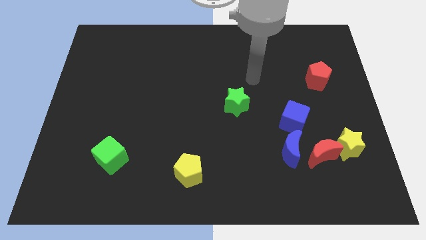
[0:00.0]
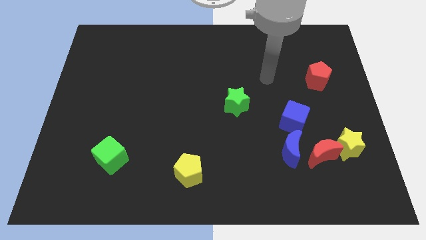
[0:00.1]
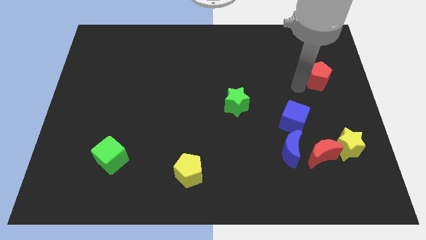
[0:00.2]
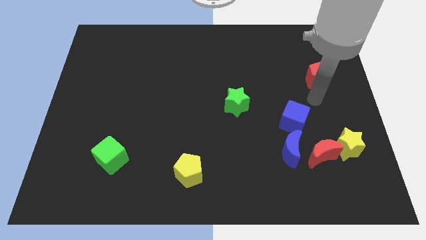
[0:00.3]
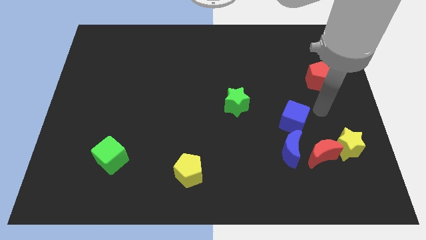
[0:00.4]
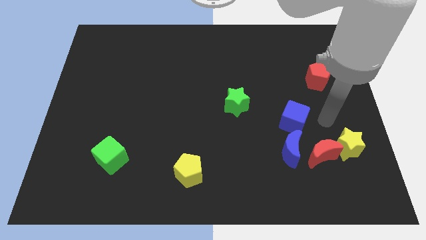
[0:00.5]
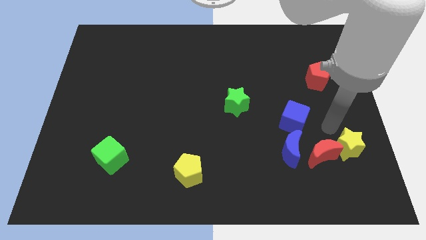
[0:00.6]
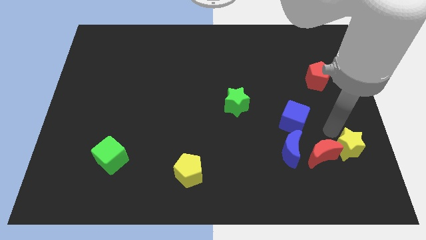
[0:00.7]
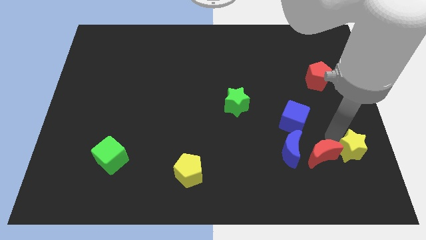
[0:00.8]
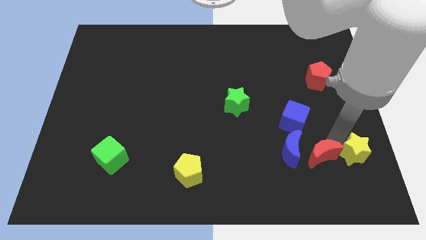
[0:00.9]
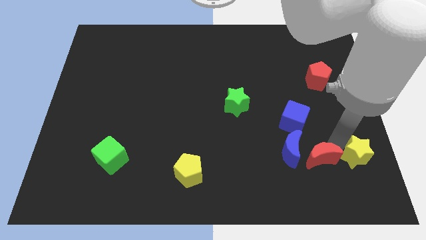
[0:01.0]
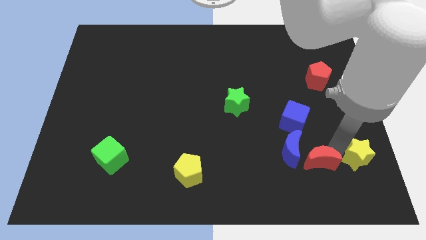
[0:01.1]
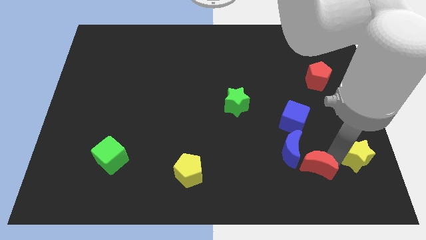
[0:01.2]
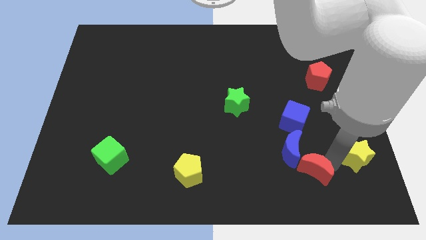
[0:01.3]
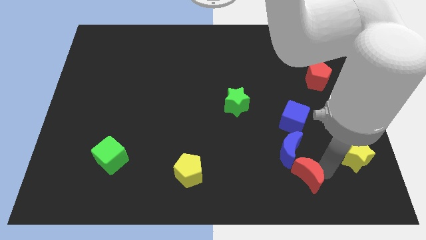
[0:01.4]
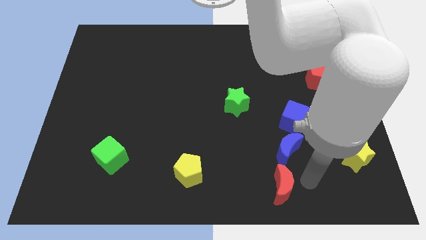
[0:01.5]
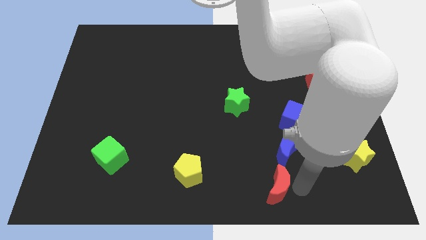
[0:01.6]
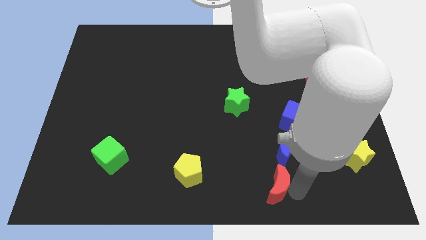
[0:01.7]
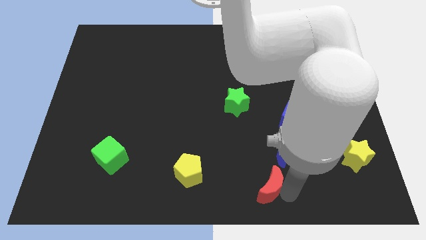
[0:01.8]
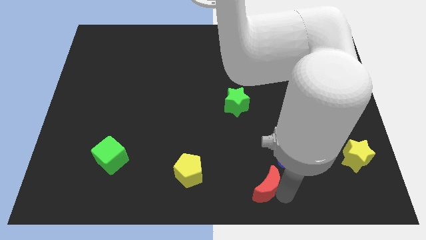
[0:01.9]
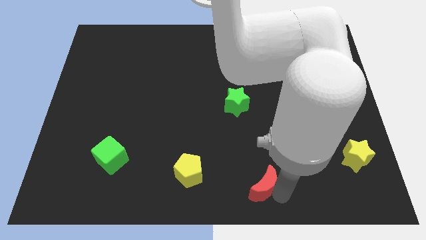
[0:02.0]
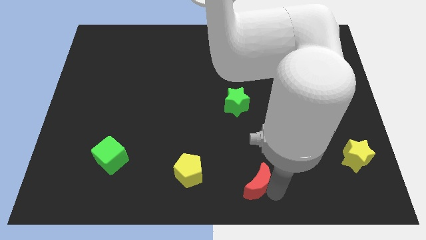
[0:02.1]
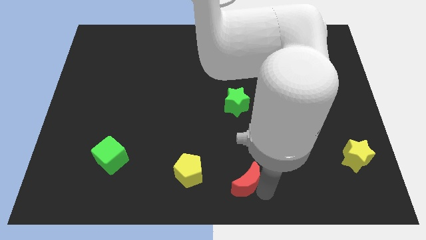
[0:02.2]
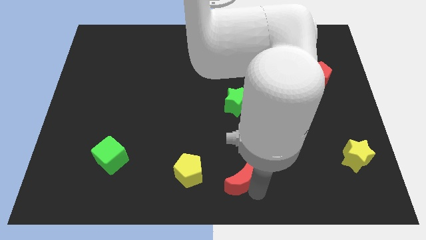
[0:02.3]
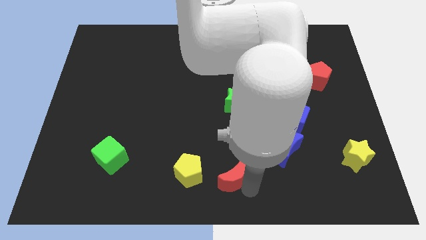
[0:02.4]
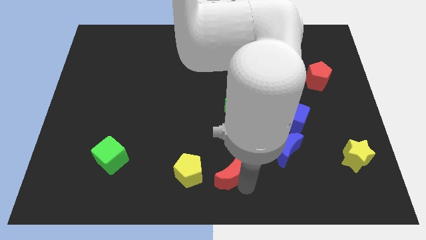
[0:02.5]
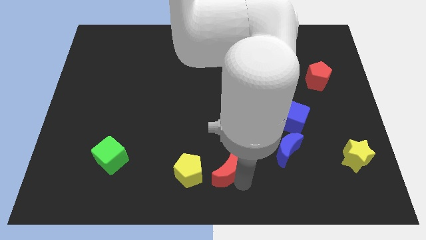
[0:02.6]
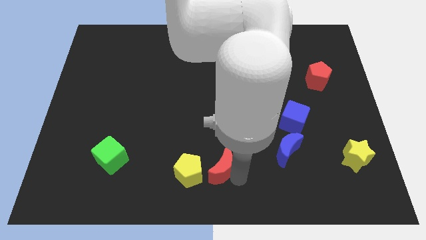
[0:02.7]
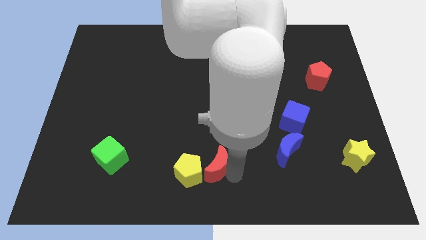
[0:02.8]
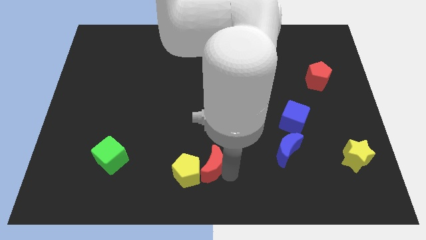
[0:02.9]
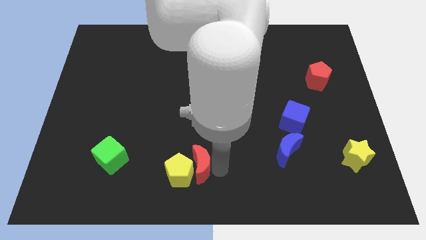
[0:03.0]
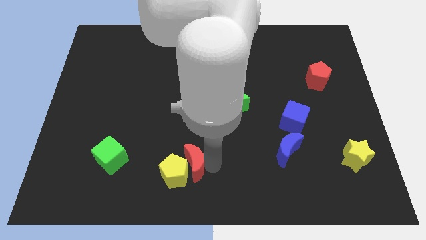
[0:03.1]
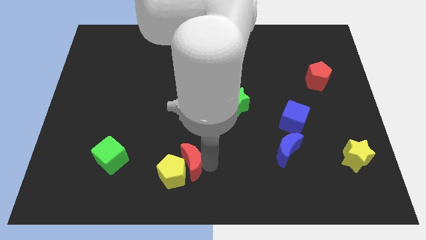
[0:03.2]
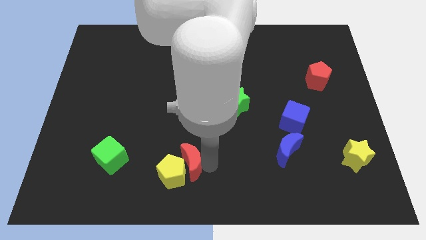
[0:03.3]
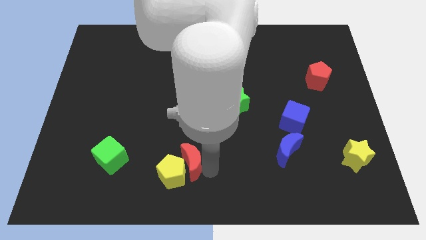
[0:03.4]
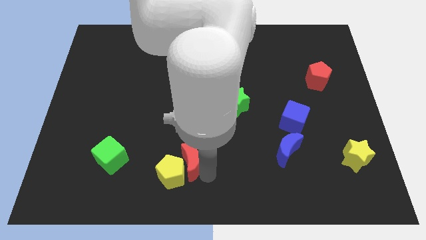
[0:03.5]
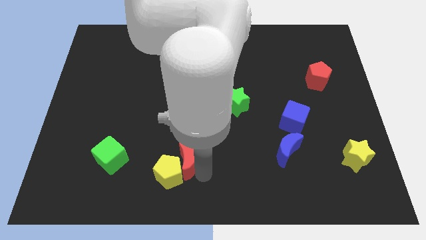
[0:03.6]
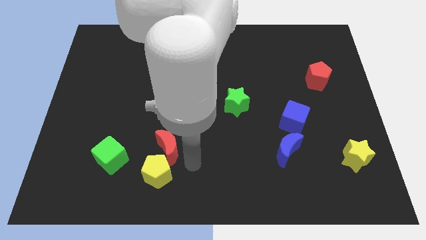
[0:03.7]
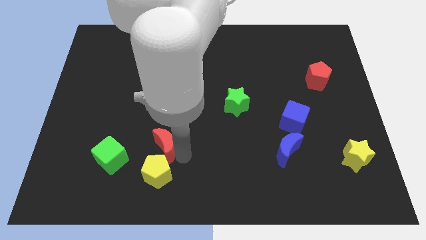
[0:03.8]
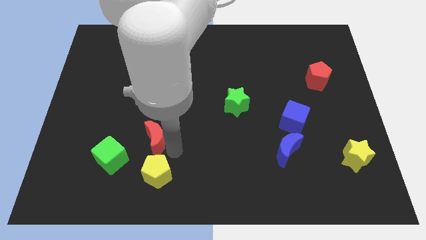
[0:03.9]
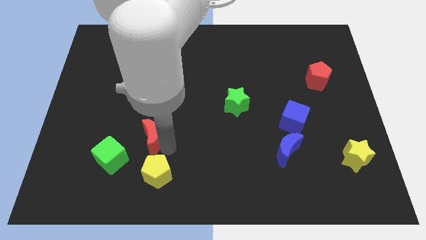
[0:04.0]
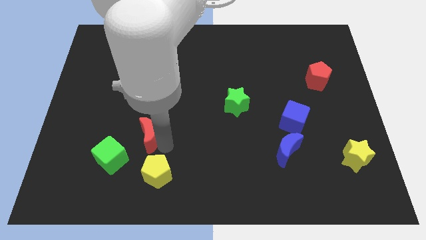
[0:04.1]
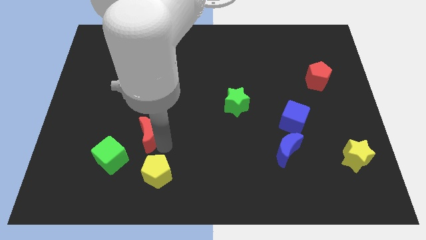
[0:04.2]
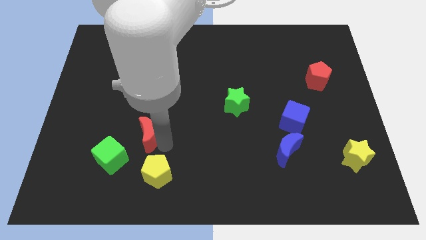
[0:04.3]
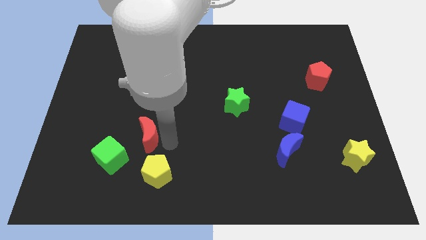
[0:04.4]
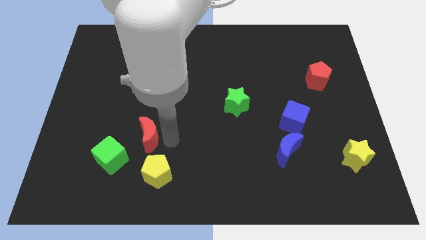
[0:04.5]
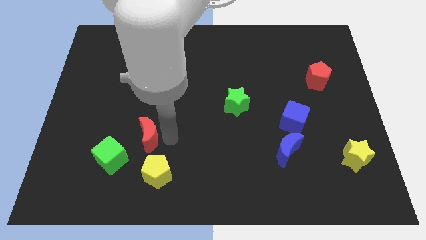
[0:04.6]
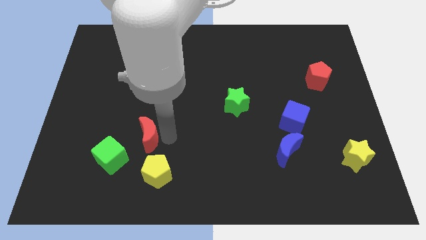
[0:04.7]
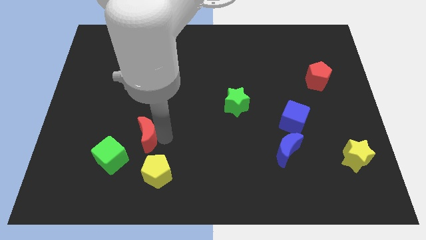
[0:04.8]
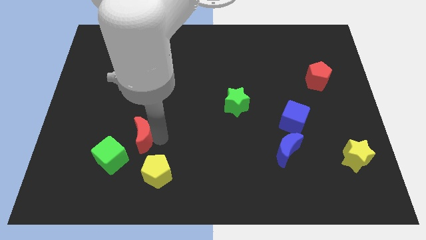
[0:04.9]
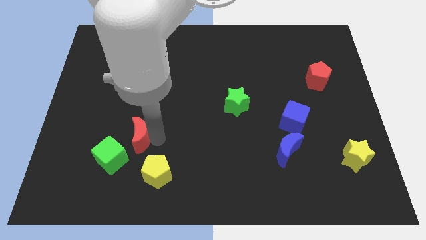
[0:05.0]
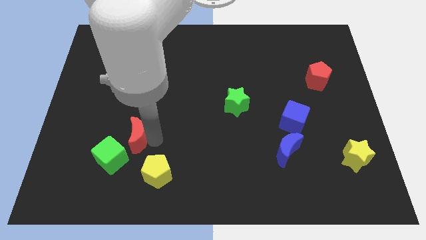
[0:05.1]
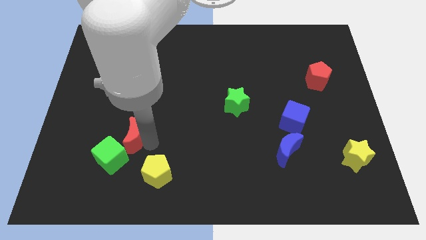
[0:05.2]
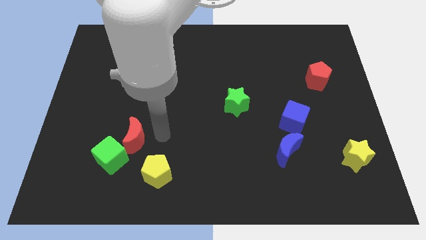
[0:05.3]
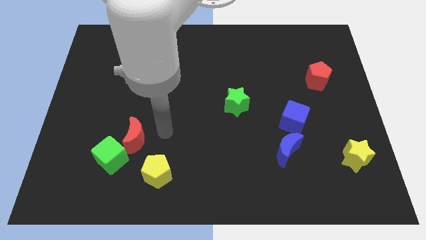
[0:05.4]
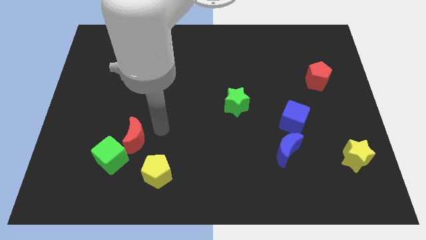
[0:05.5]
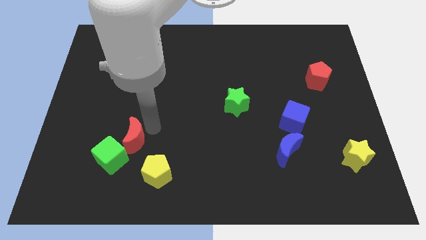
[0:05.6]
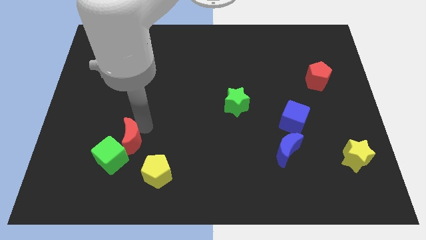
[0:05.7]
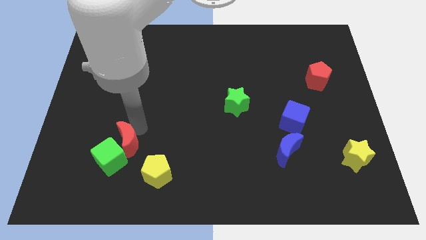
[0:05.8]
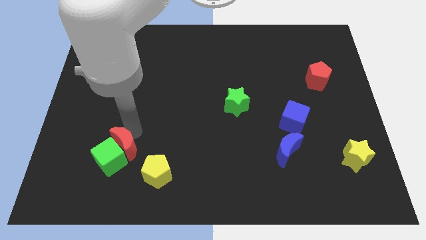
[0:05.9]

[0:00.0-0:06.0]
slide the red moon to the green cube

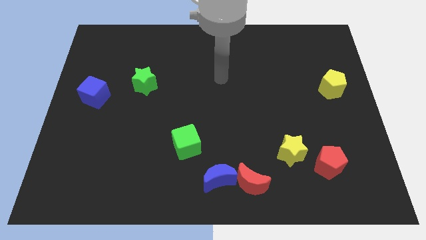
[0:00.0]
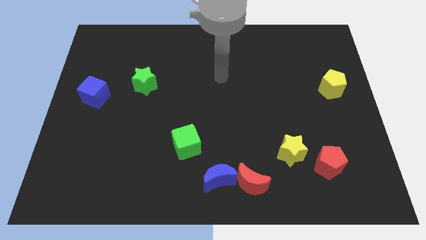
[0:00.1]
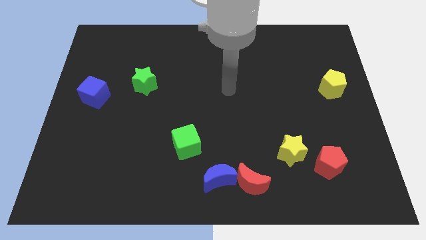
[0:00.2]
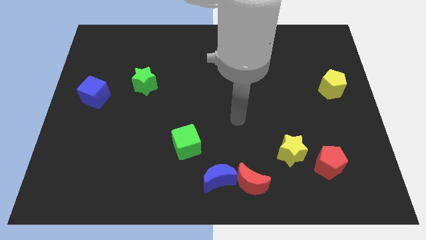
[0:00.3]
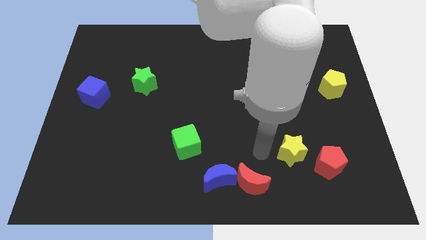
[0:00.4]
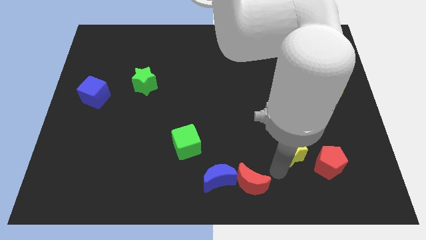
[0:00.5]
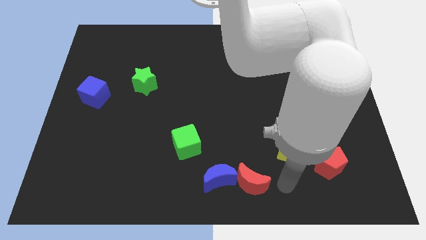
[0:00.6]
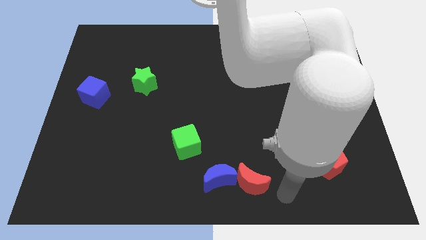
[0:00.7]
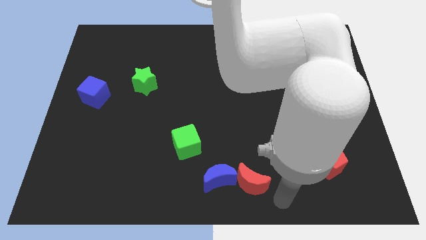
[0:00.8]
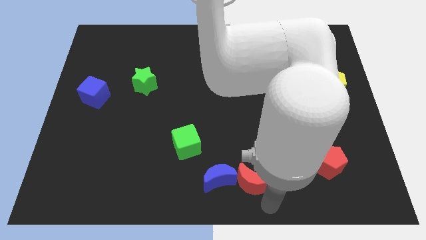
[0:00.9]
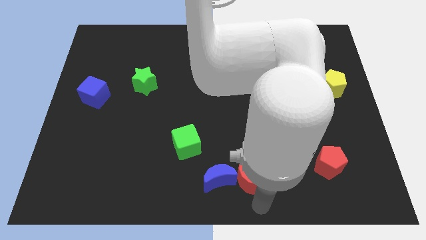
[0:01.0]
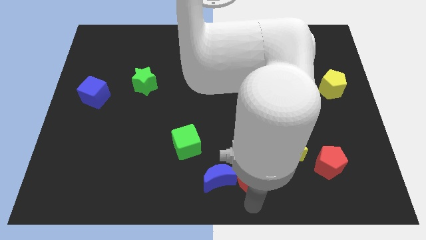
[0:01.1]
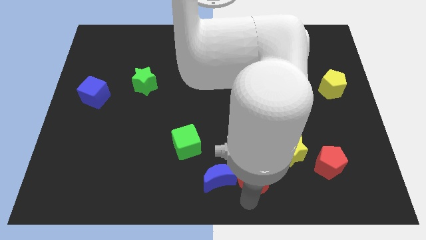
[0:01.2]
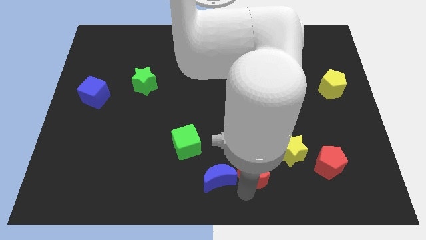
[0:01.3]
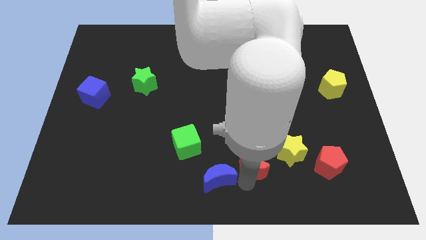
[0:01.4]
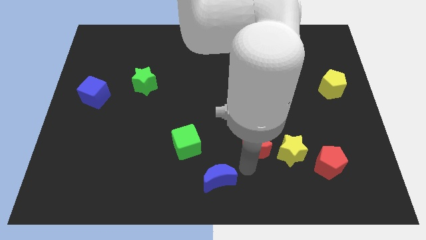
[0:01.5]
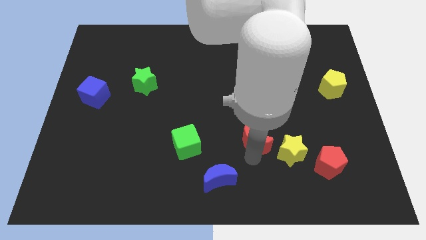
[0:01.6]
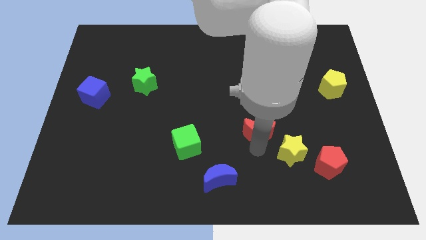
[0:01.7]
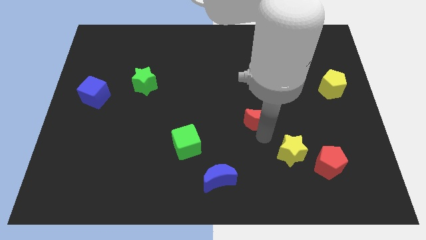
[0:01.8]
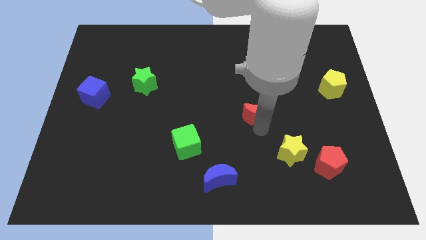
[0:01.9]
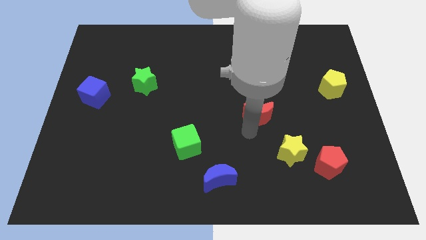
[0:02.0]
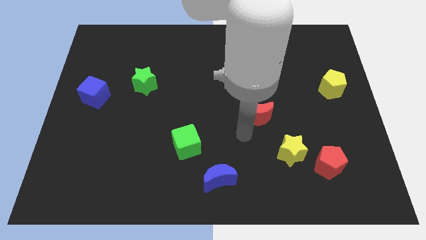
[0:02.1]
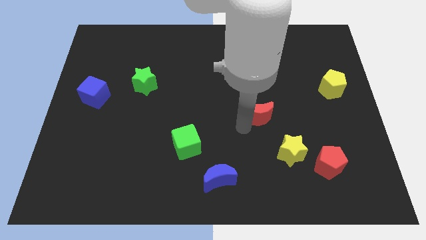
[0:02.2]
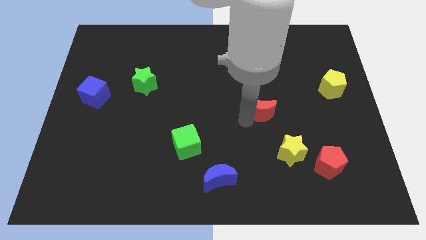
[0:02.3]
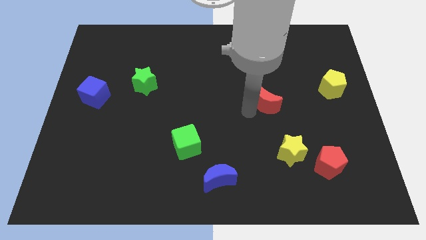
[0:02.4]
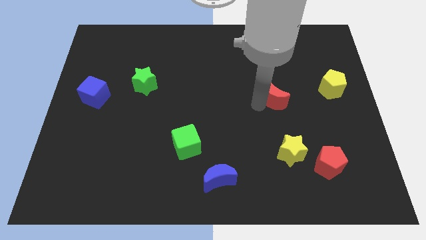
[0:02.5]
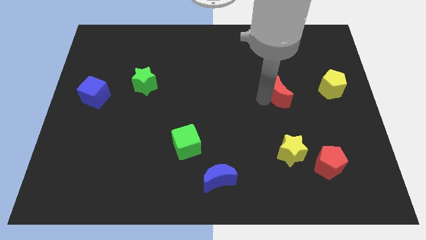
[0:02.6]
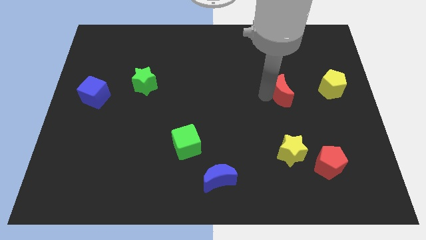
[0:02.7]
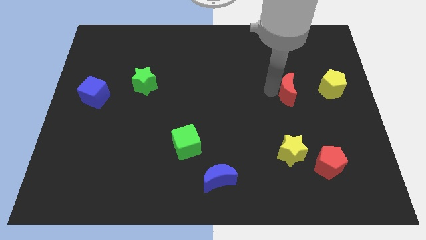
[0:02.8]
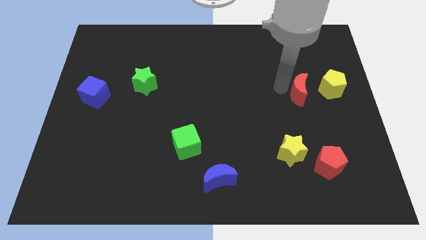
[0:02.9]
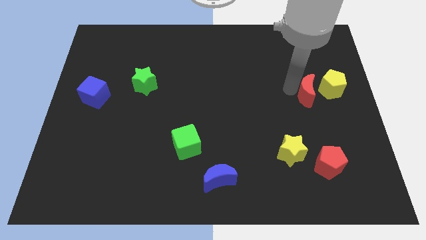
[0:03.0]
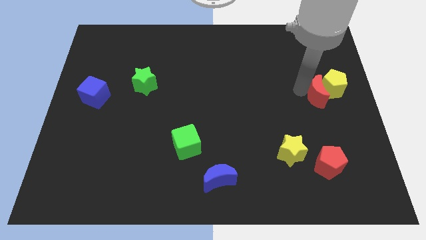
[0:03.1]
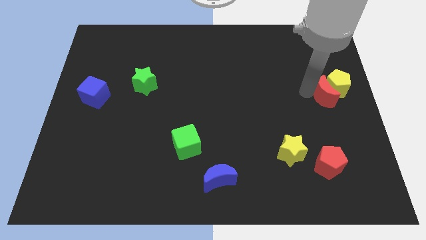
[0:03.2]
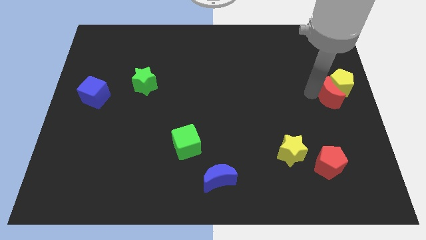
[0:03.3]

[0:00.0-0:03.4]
move the red moon close to the yellow pentagon
